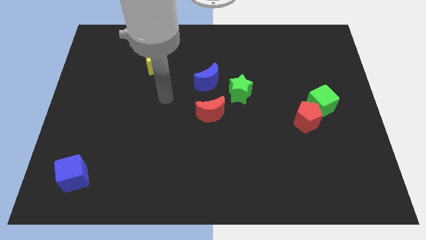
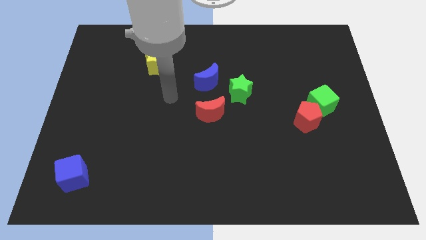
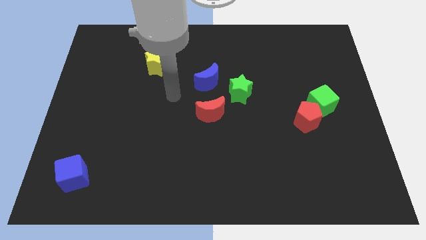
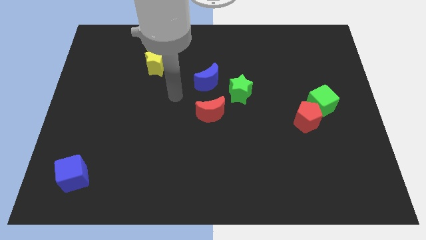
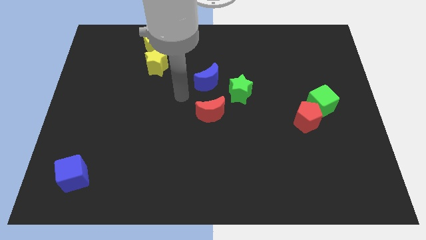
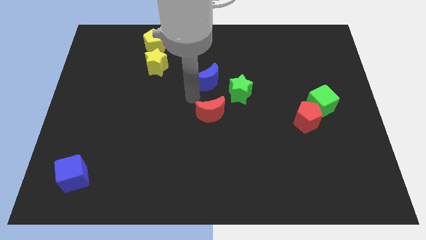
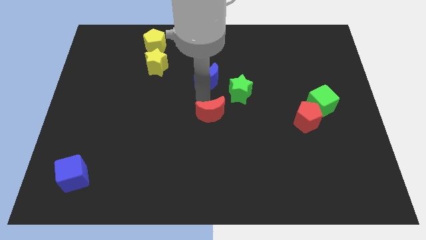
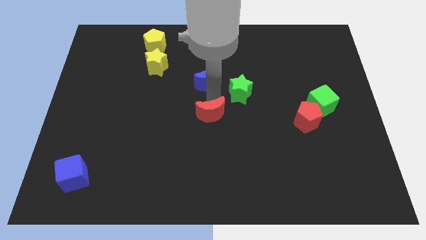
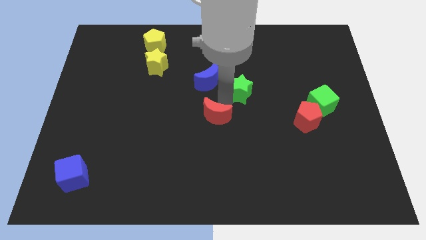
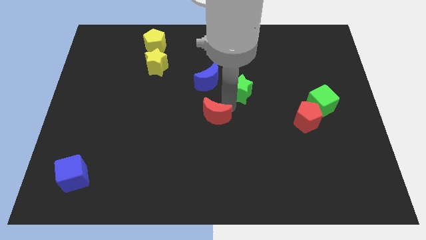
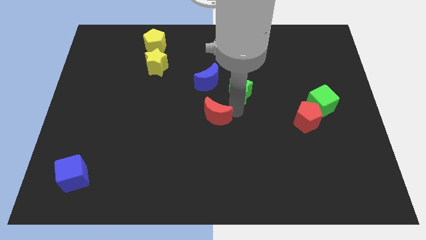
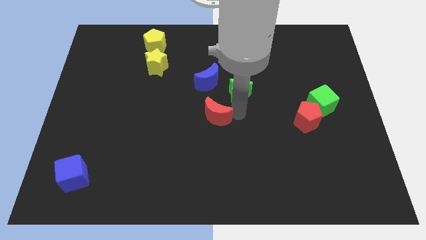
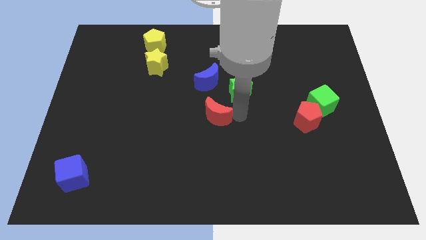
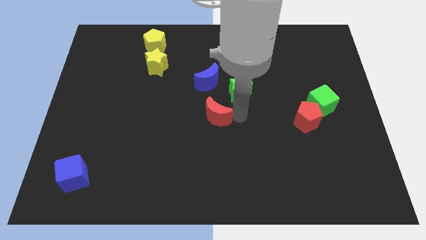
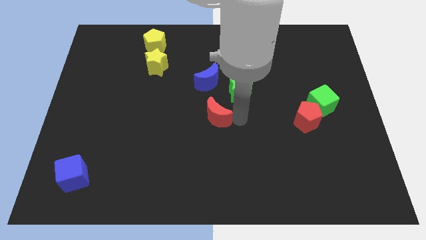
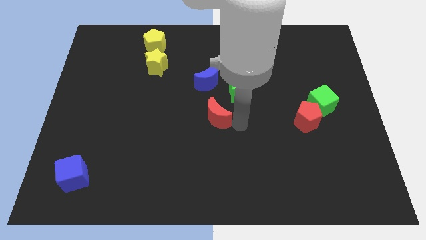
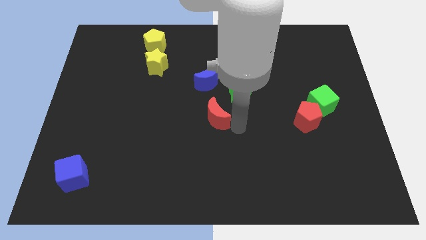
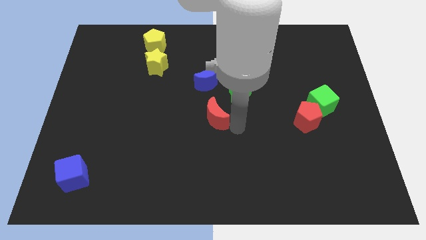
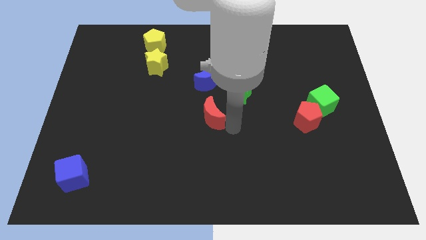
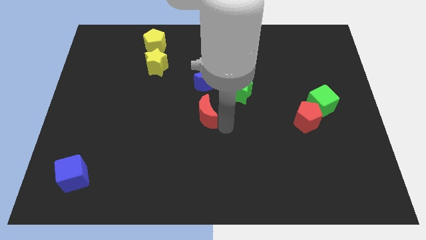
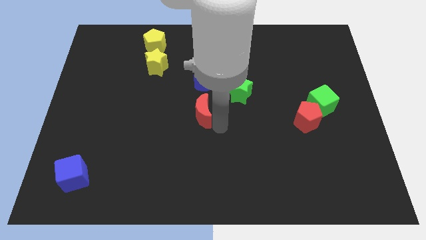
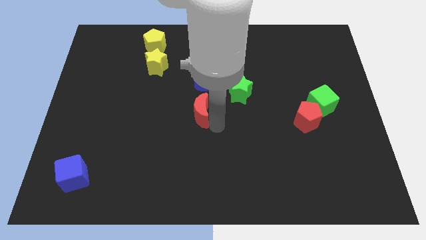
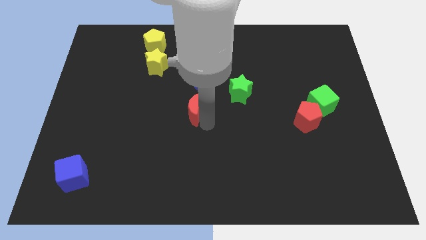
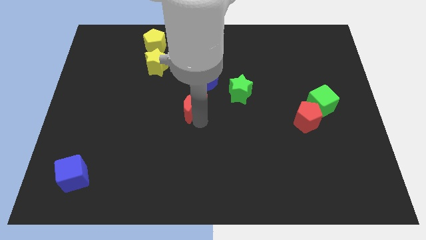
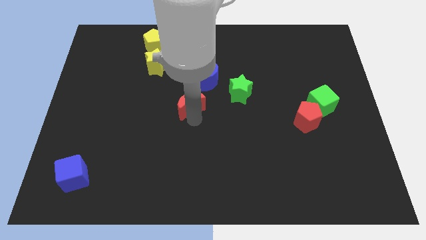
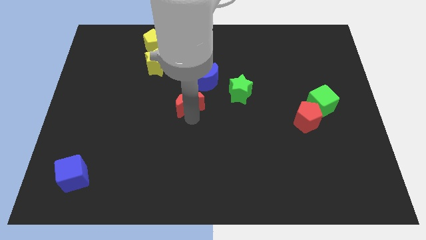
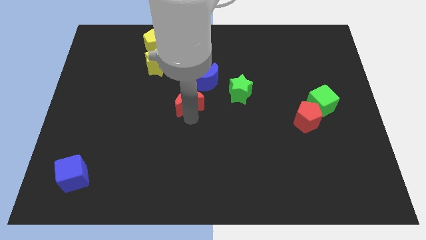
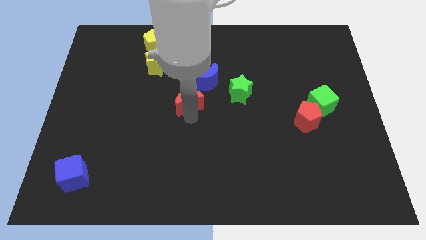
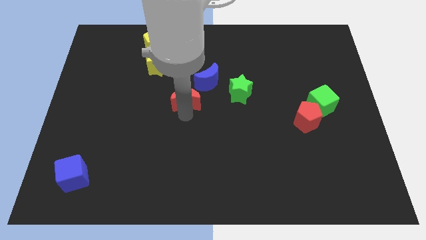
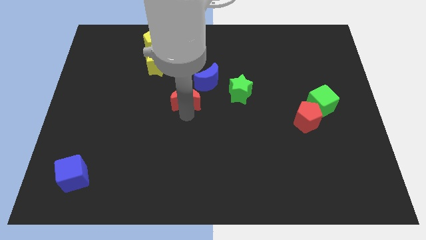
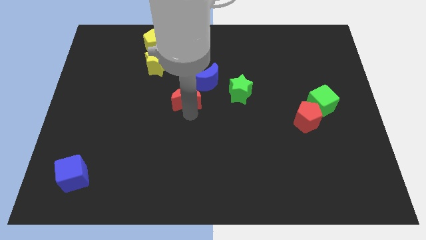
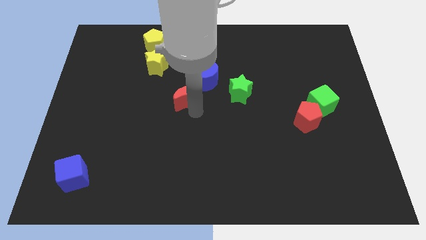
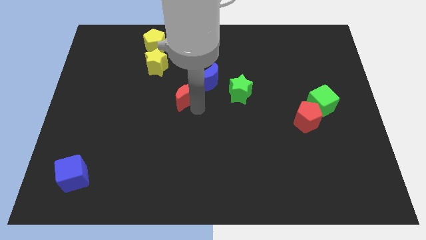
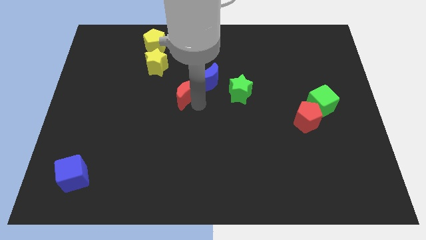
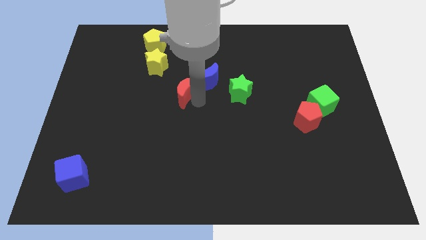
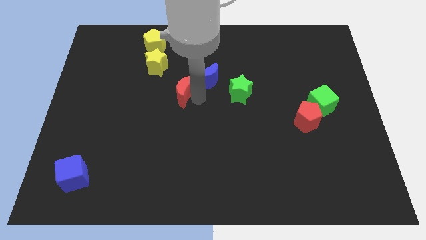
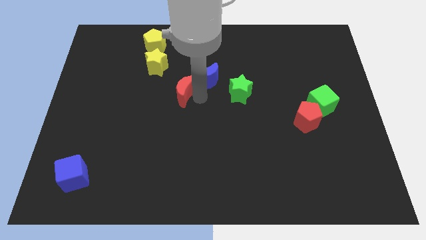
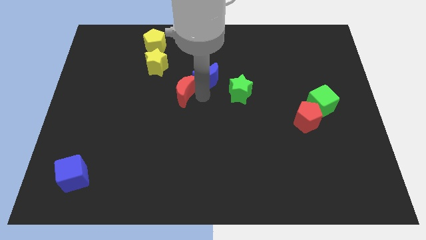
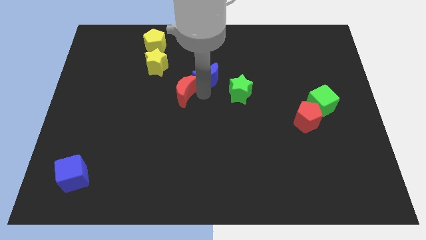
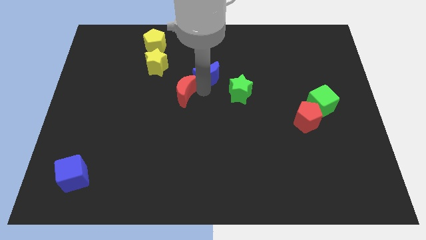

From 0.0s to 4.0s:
place the red crescent below the blue crescent

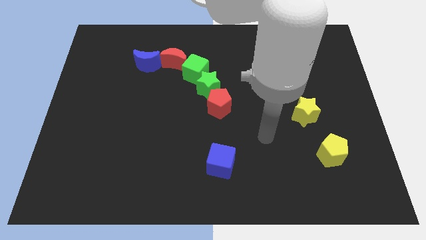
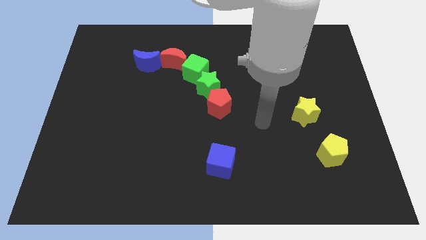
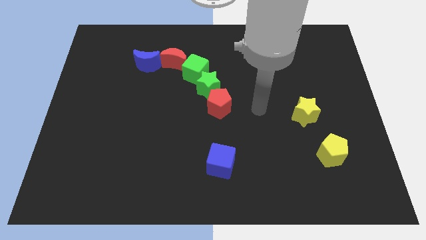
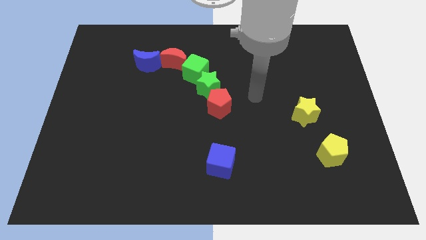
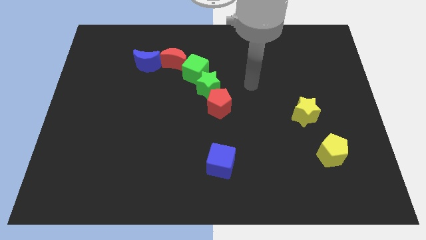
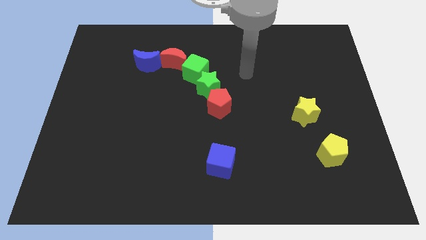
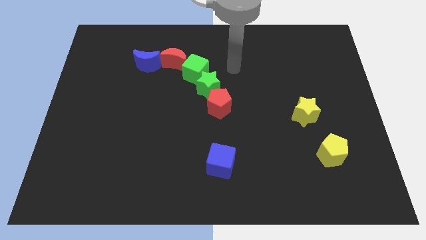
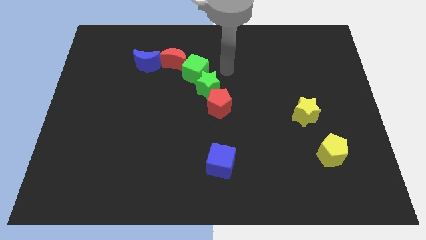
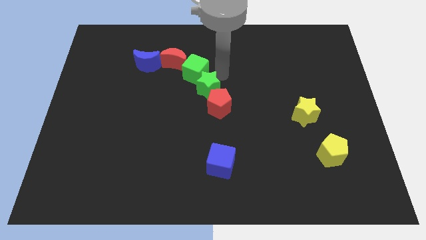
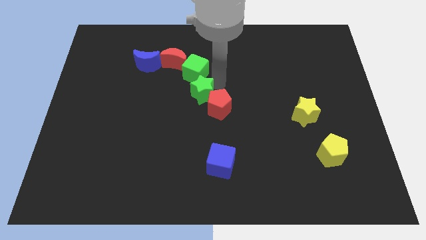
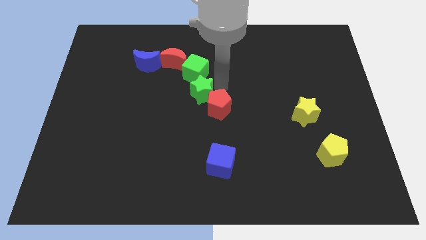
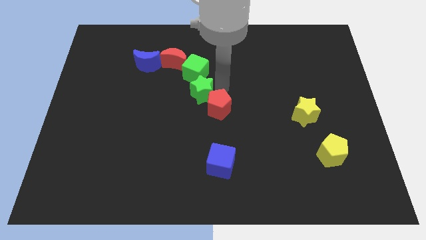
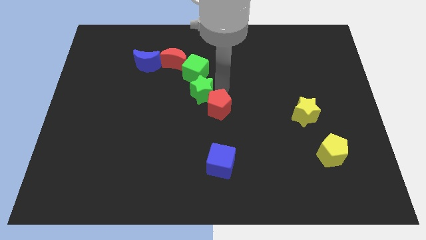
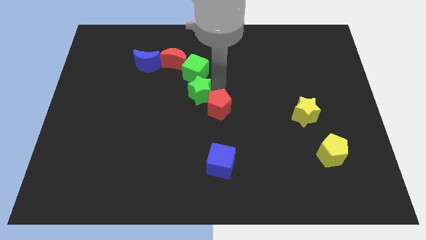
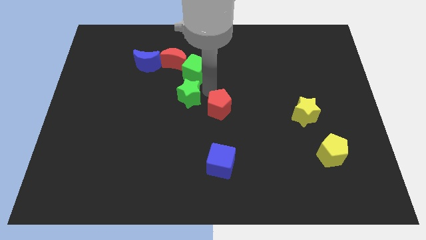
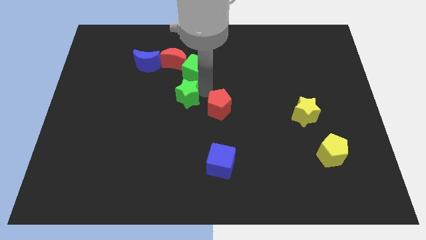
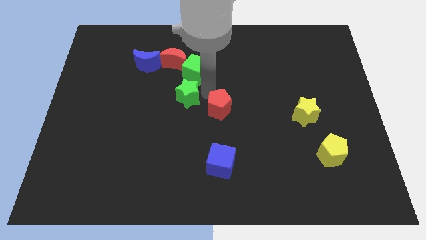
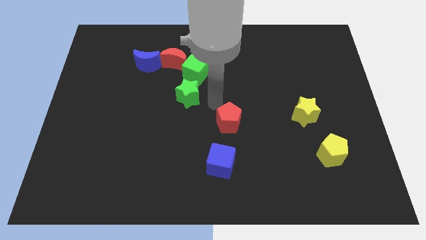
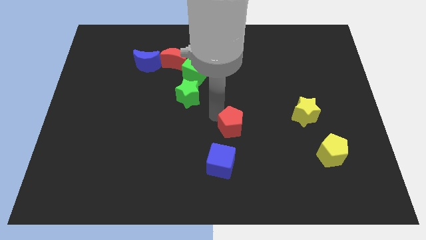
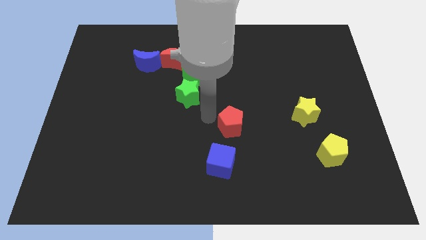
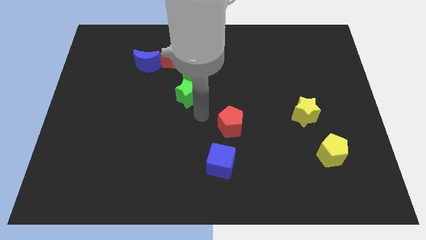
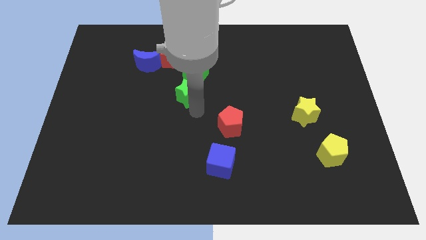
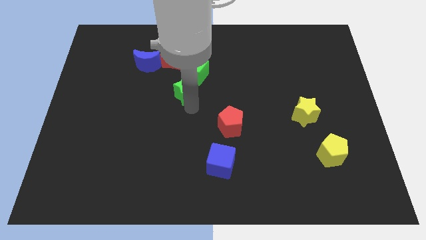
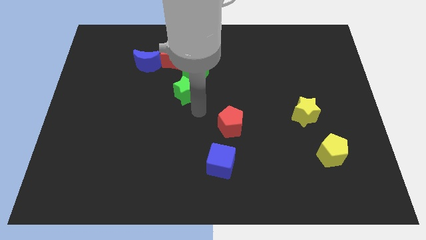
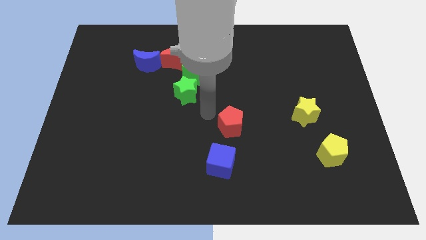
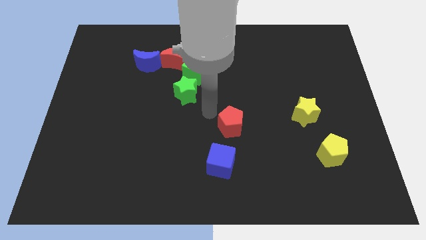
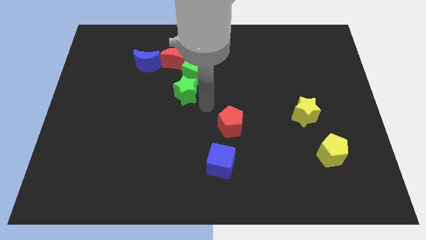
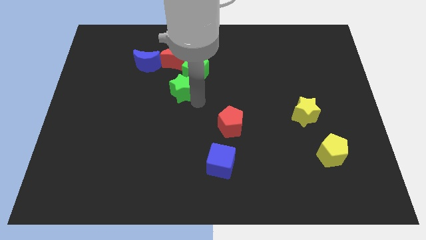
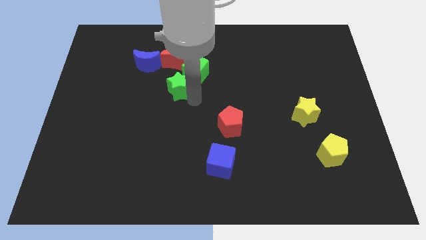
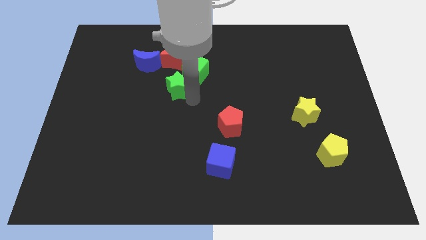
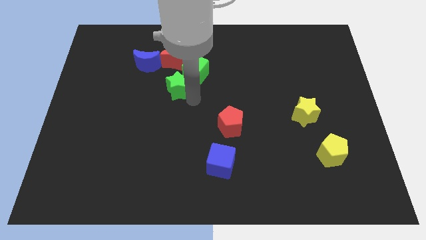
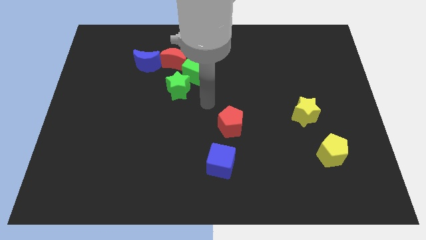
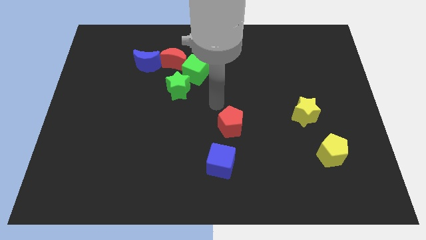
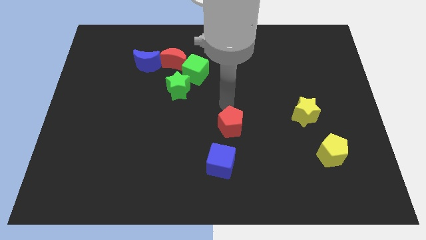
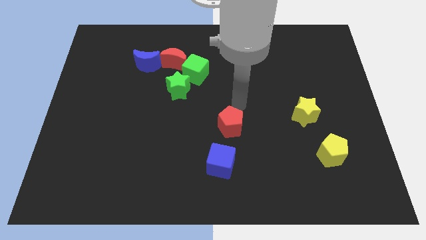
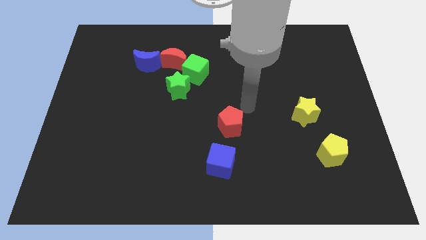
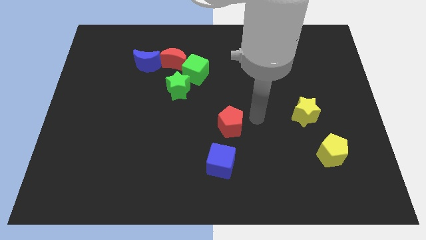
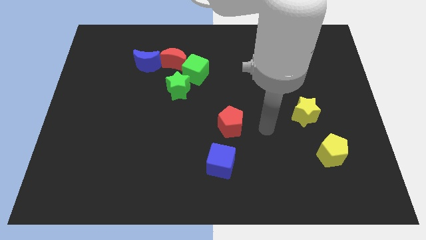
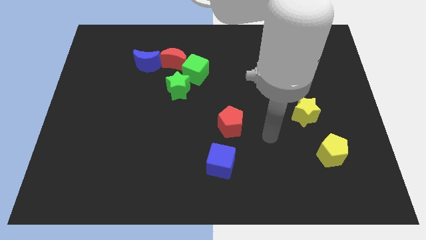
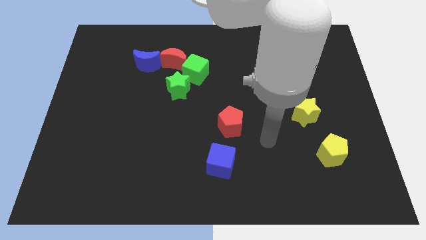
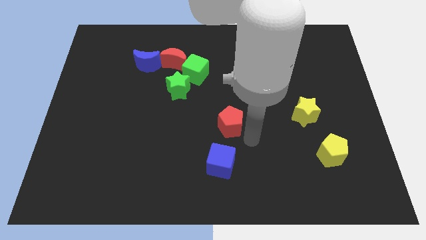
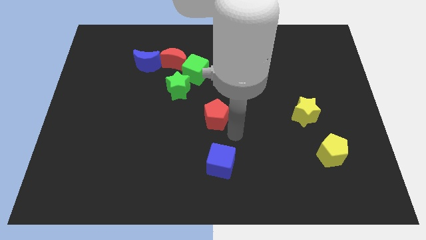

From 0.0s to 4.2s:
separate the green star and the red pentagon

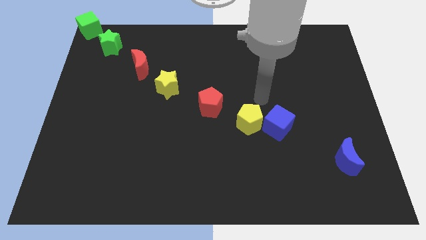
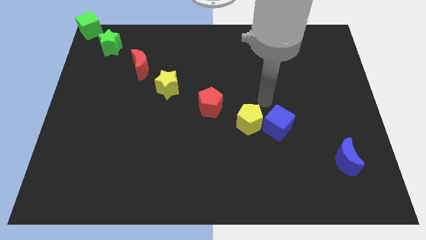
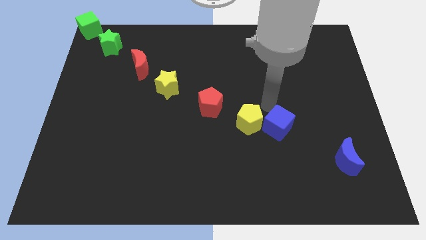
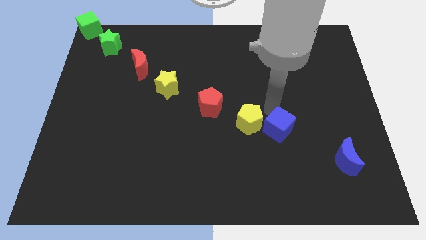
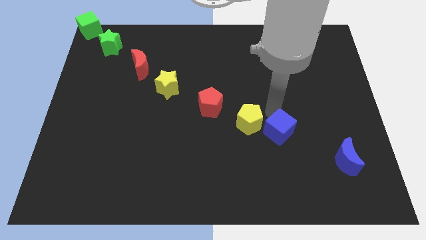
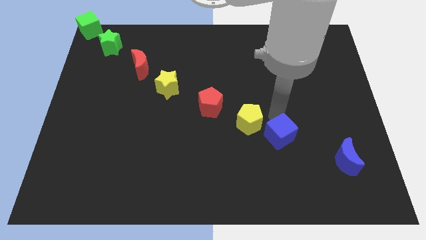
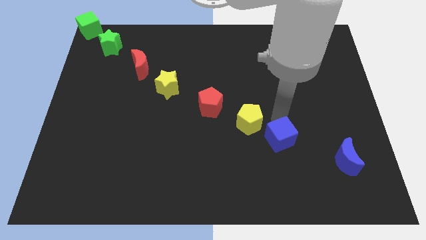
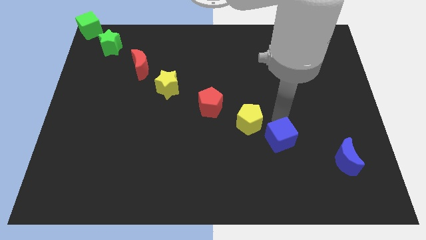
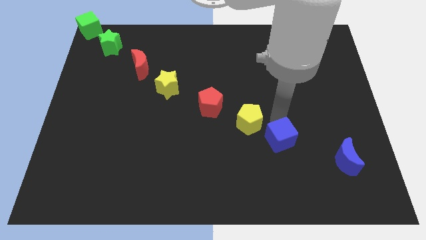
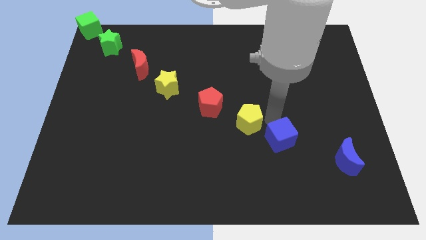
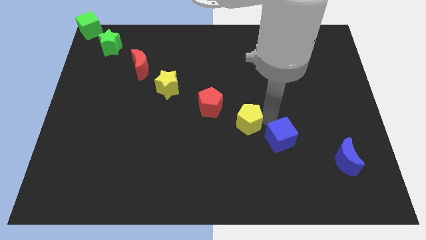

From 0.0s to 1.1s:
push the blue cube slightly down
